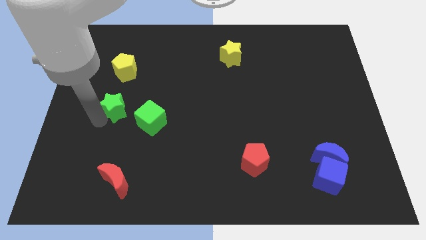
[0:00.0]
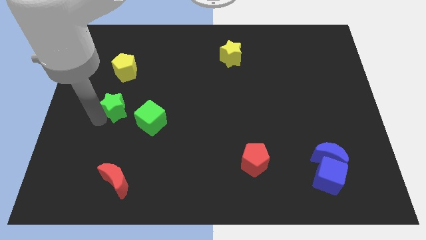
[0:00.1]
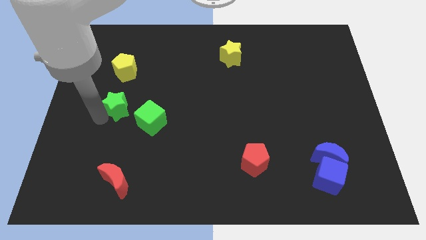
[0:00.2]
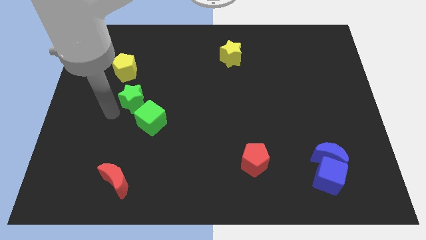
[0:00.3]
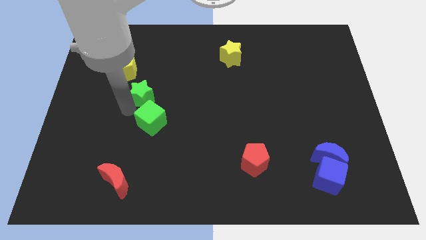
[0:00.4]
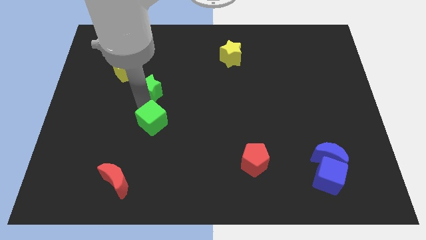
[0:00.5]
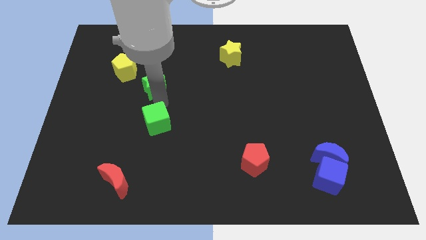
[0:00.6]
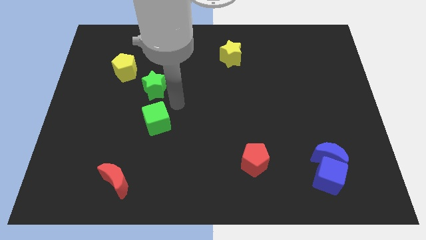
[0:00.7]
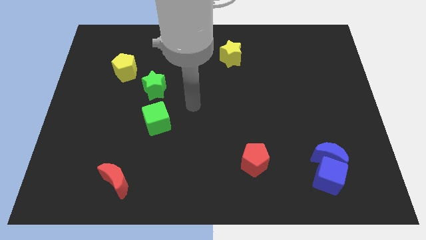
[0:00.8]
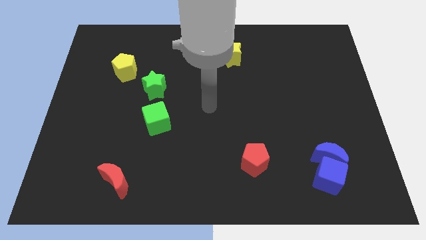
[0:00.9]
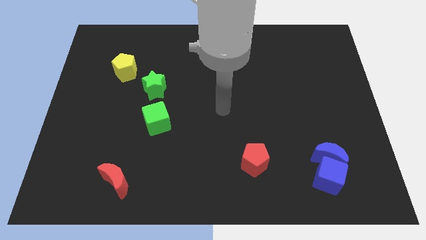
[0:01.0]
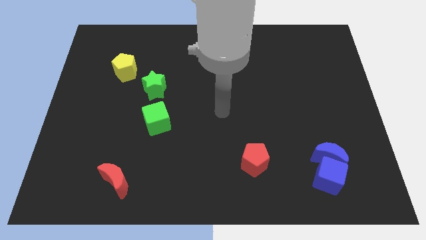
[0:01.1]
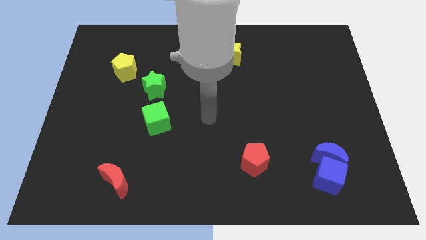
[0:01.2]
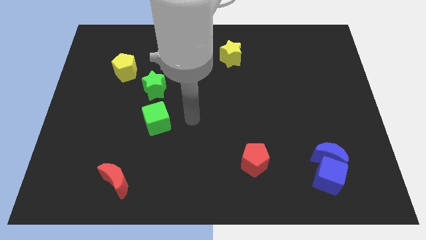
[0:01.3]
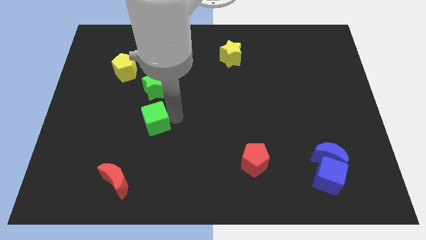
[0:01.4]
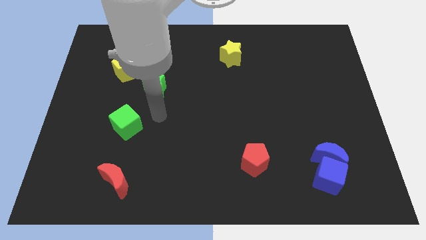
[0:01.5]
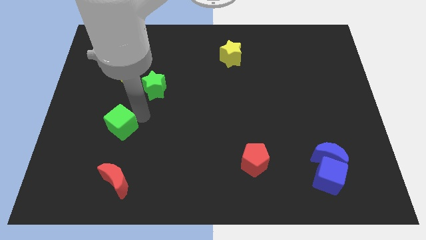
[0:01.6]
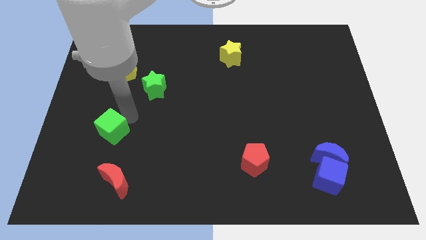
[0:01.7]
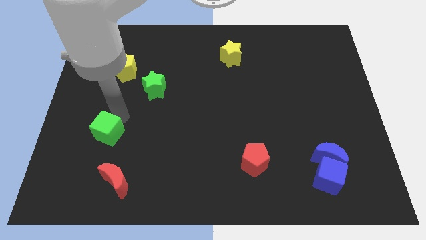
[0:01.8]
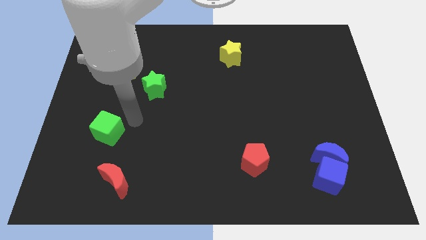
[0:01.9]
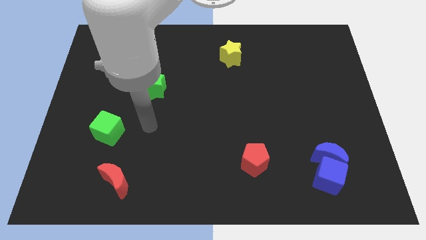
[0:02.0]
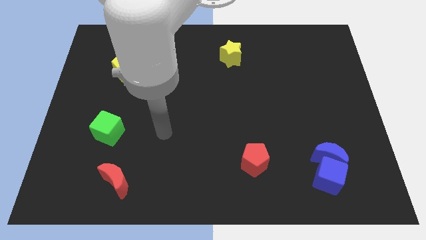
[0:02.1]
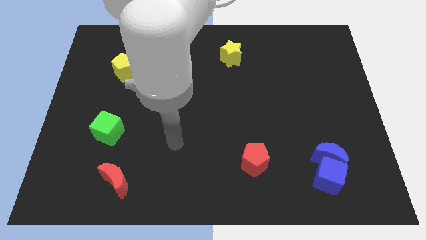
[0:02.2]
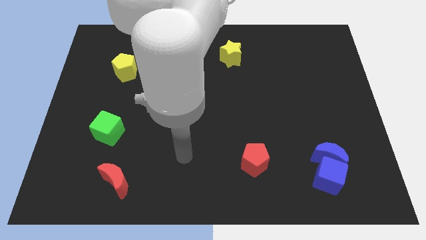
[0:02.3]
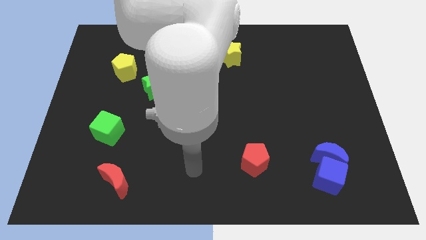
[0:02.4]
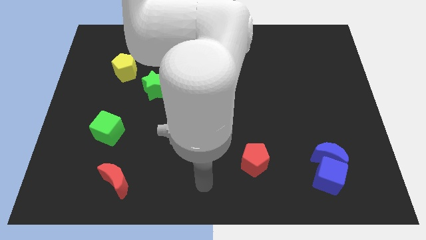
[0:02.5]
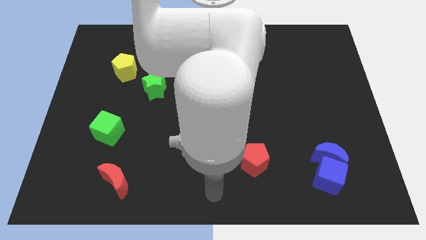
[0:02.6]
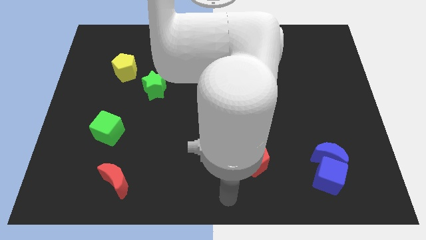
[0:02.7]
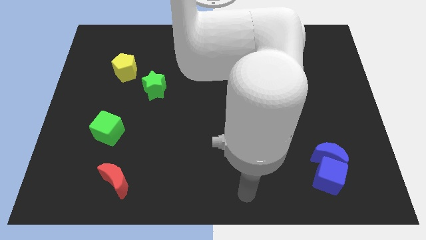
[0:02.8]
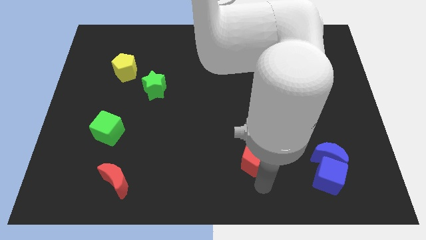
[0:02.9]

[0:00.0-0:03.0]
place the green cube above the red moon

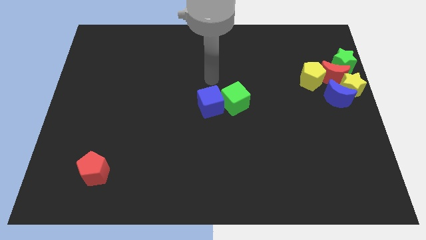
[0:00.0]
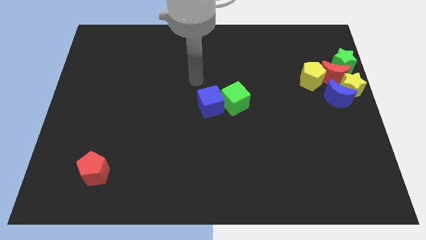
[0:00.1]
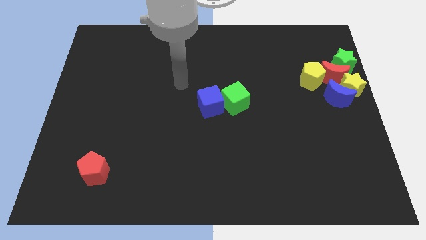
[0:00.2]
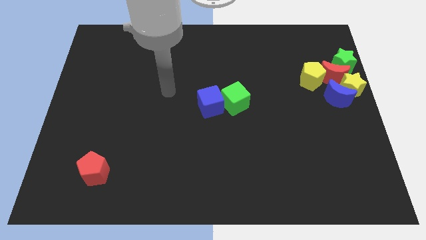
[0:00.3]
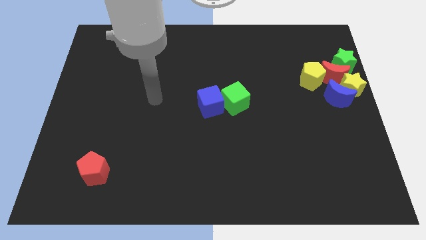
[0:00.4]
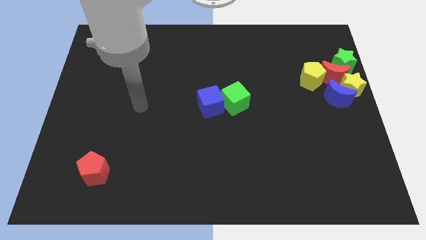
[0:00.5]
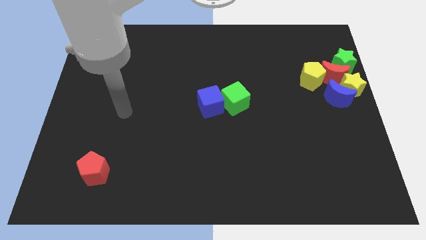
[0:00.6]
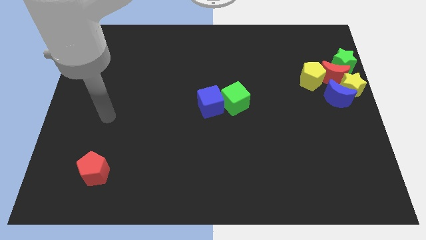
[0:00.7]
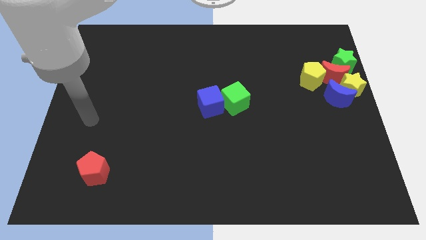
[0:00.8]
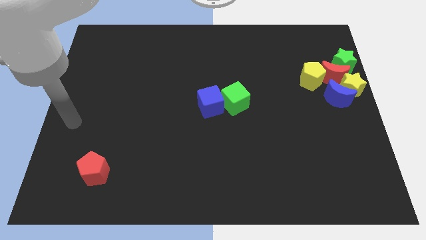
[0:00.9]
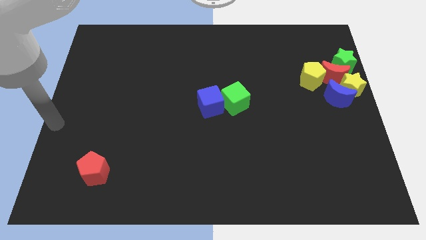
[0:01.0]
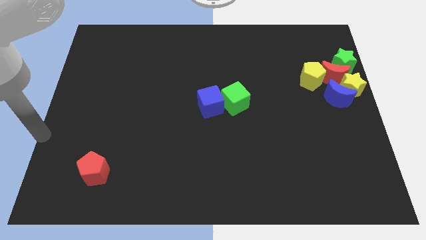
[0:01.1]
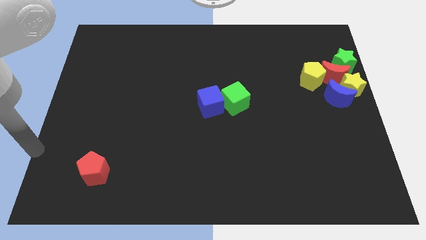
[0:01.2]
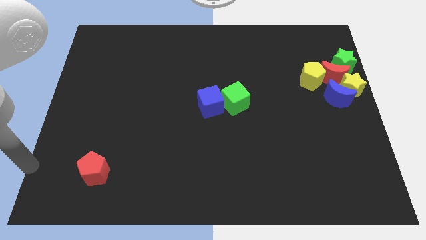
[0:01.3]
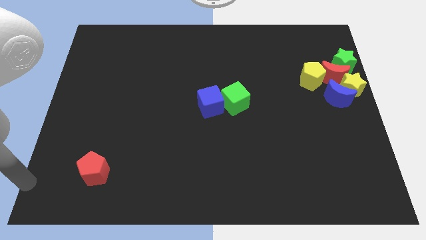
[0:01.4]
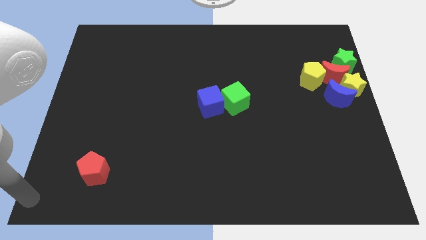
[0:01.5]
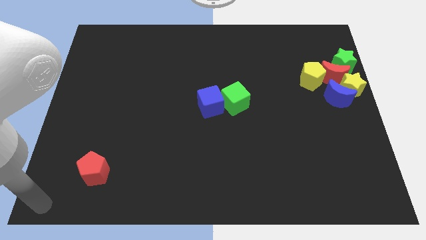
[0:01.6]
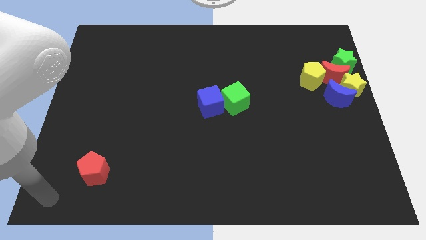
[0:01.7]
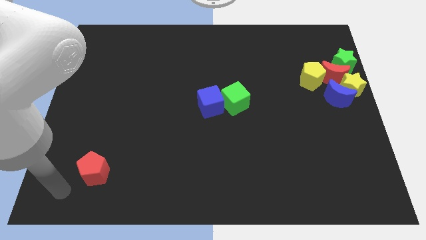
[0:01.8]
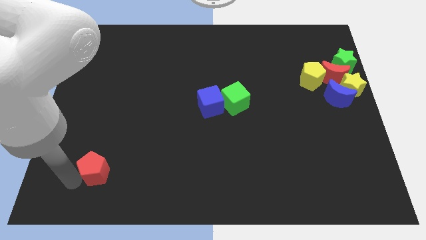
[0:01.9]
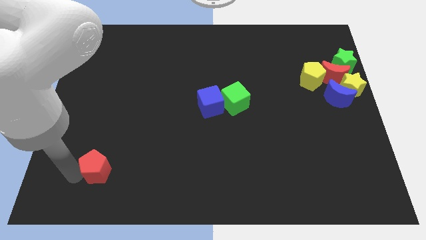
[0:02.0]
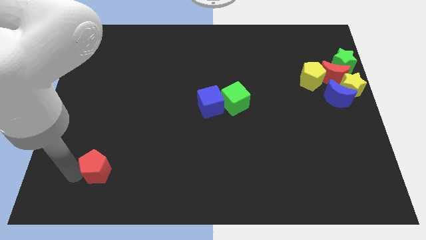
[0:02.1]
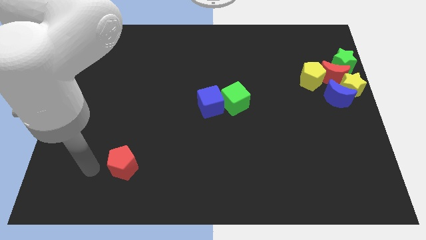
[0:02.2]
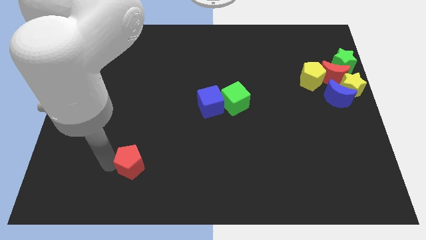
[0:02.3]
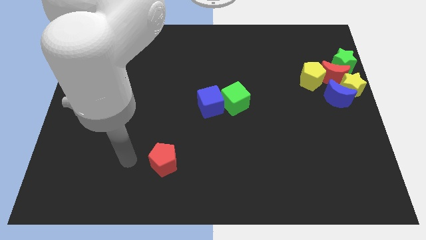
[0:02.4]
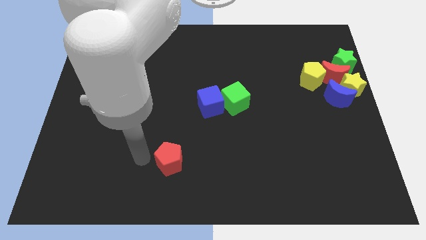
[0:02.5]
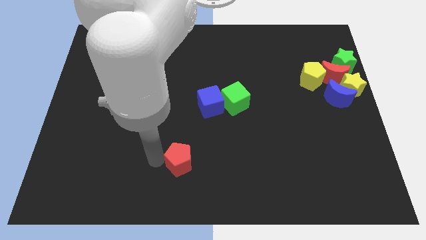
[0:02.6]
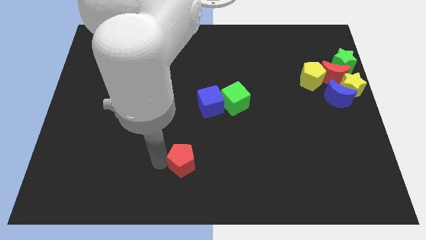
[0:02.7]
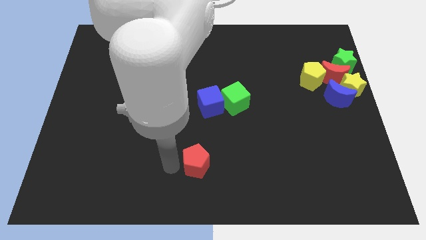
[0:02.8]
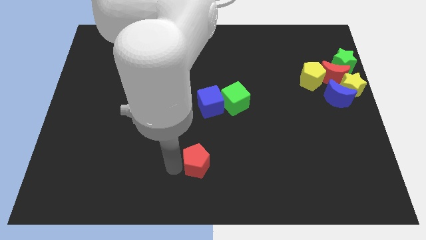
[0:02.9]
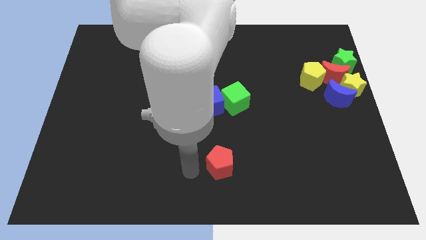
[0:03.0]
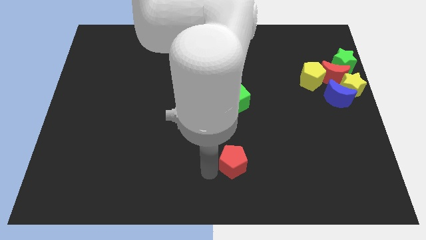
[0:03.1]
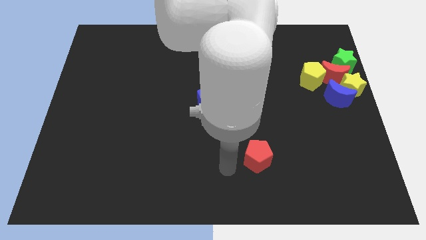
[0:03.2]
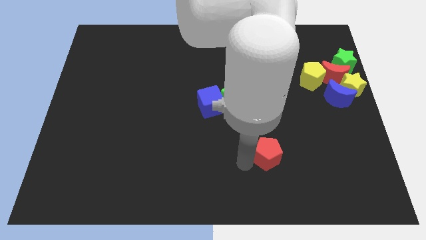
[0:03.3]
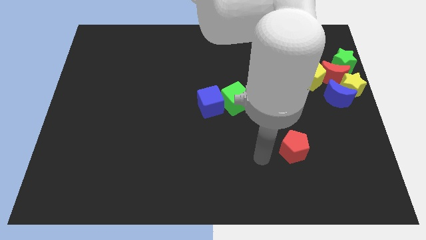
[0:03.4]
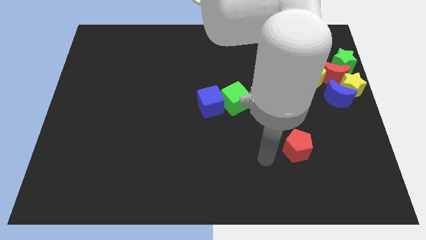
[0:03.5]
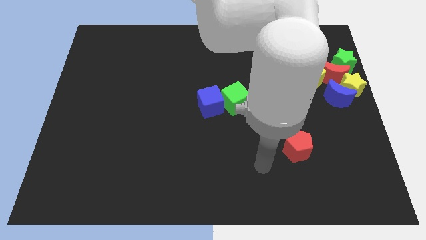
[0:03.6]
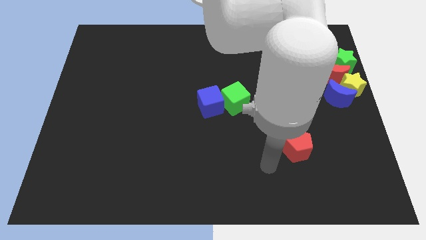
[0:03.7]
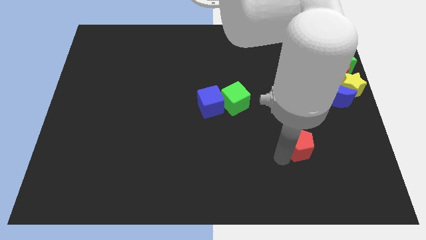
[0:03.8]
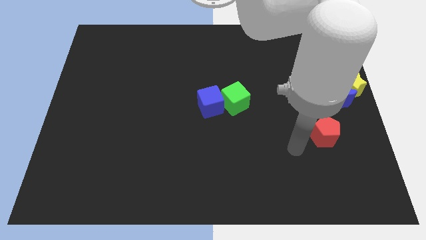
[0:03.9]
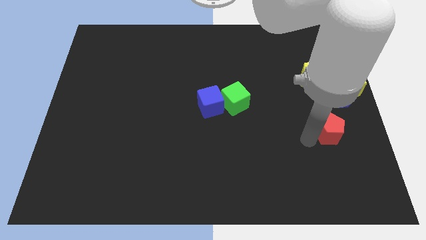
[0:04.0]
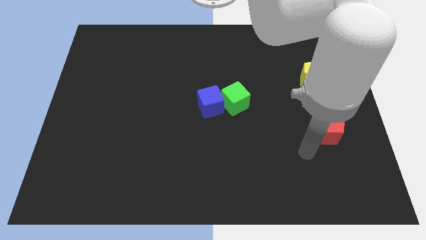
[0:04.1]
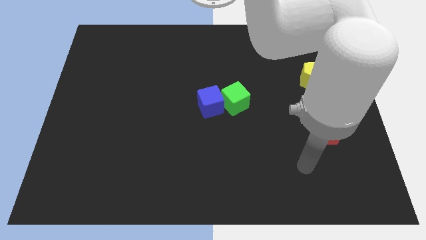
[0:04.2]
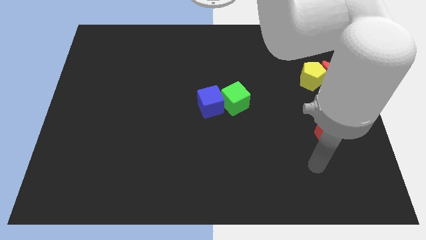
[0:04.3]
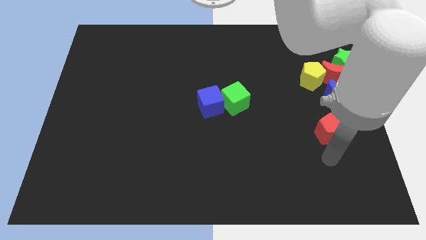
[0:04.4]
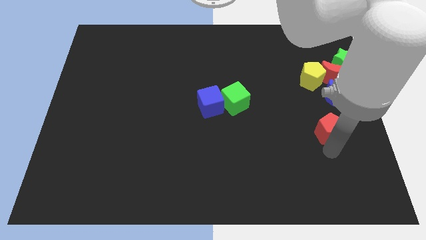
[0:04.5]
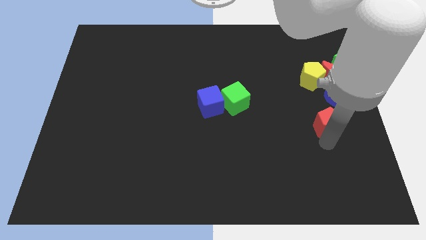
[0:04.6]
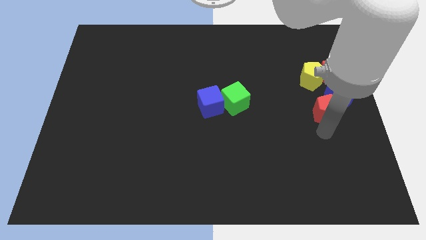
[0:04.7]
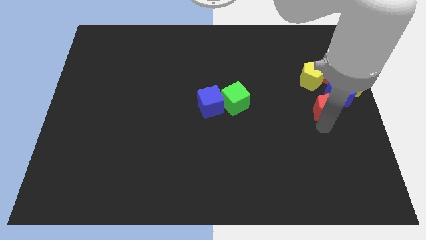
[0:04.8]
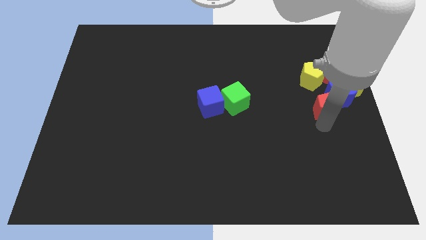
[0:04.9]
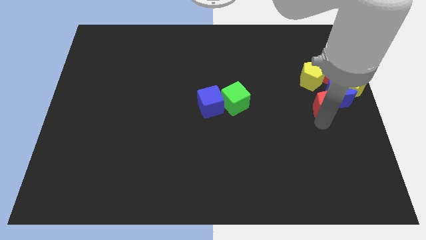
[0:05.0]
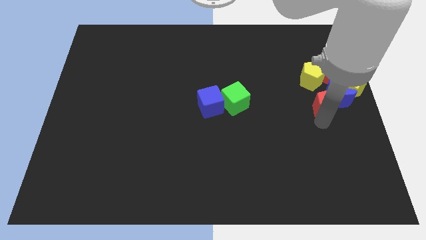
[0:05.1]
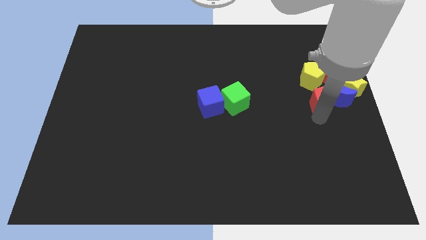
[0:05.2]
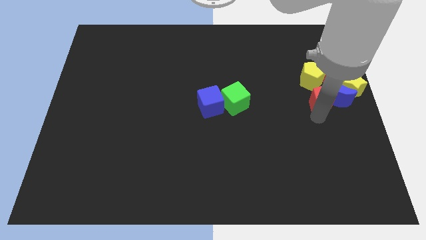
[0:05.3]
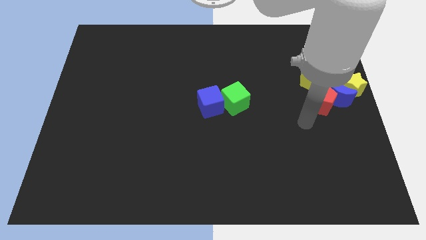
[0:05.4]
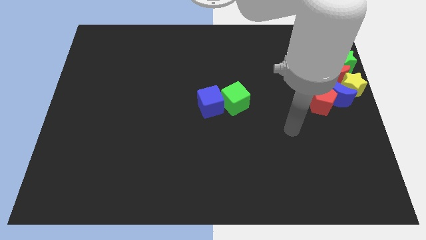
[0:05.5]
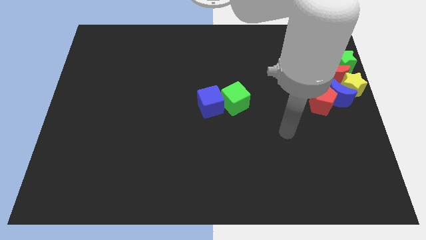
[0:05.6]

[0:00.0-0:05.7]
move the red pentagon below to the yellow pentagon

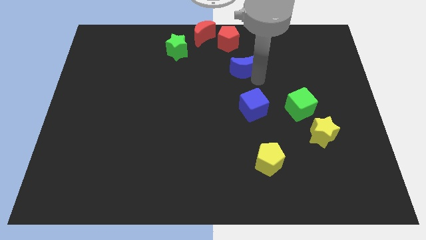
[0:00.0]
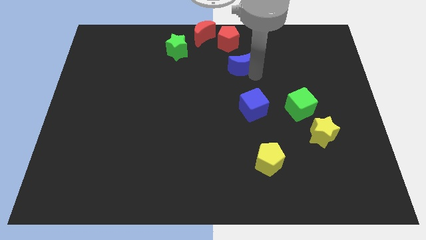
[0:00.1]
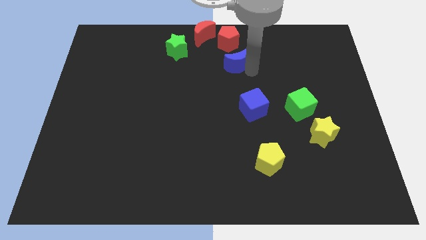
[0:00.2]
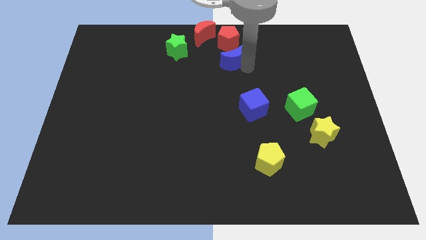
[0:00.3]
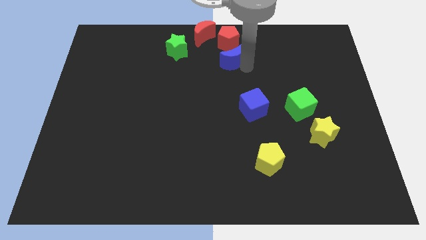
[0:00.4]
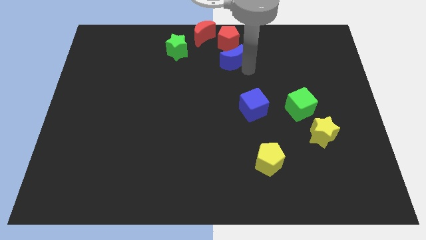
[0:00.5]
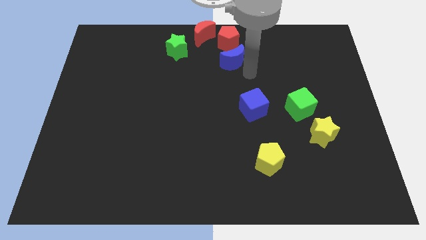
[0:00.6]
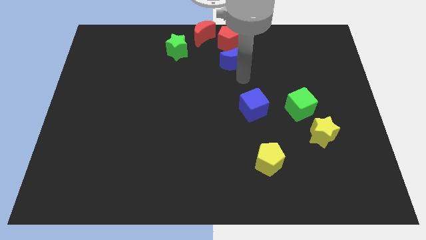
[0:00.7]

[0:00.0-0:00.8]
push blue moon into the red pentagon
